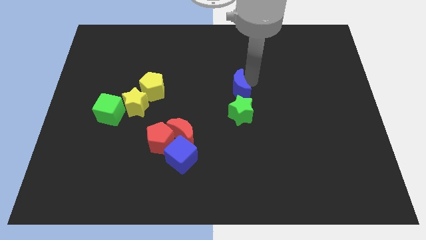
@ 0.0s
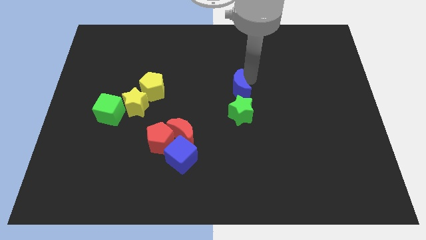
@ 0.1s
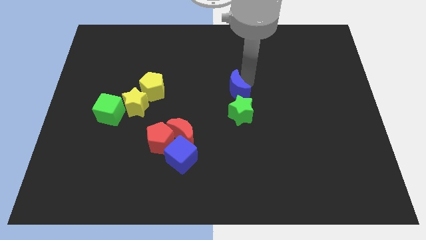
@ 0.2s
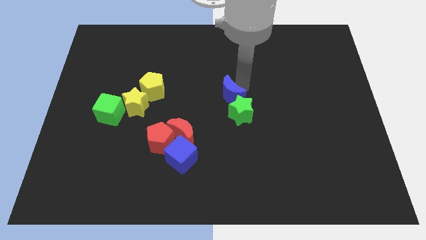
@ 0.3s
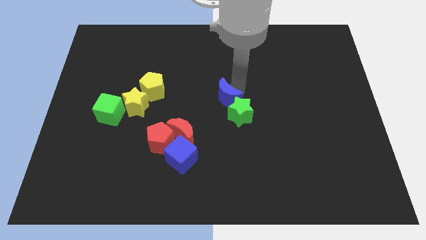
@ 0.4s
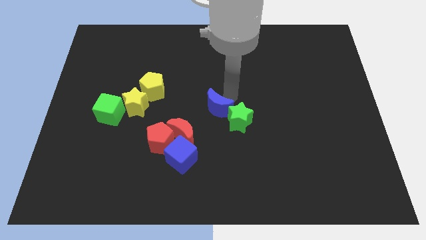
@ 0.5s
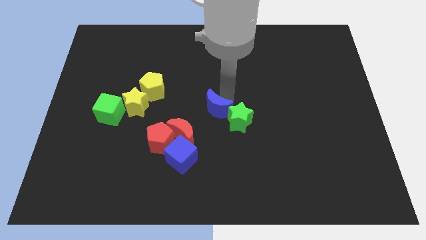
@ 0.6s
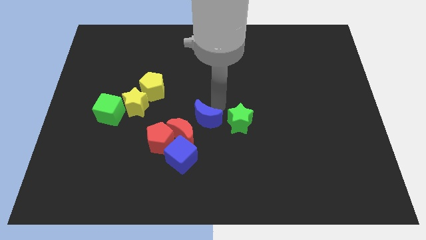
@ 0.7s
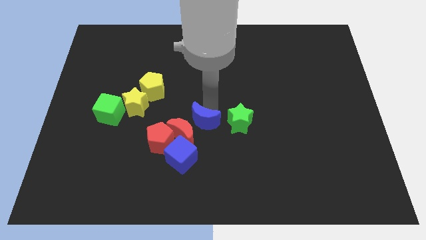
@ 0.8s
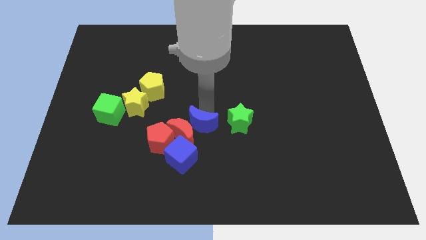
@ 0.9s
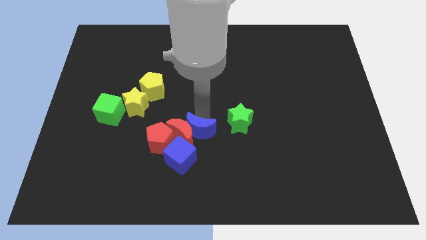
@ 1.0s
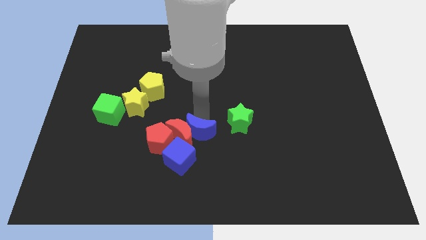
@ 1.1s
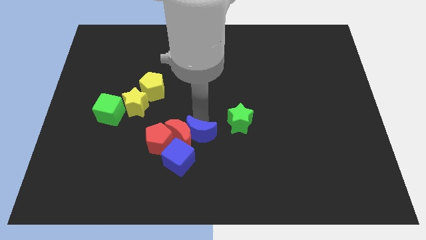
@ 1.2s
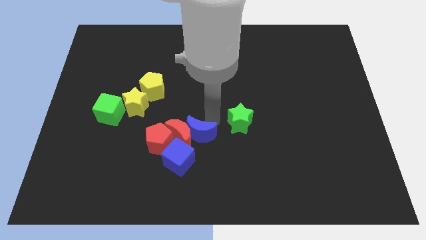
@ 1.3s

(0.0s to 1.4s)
push the blue crescent into the right of the red crescent

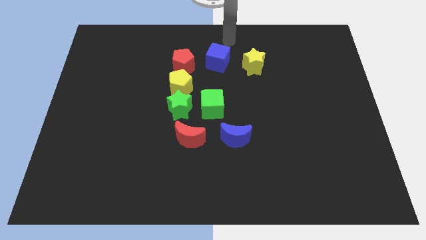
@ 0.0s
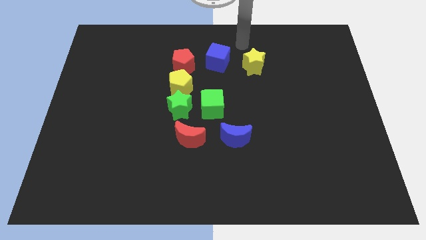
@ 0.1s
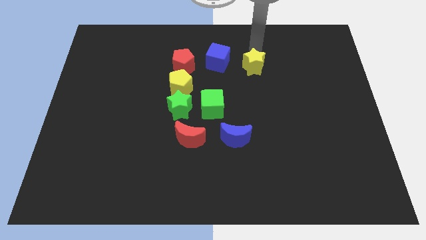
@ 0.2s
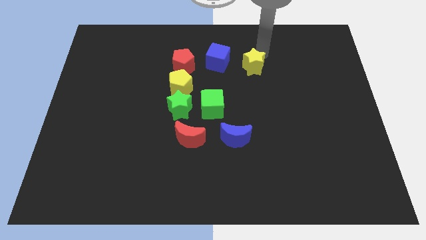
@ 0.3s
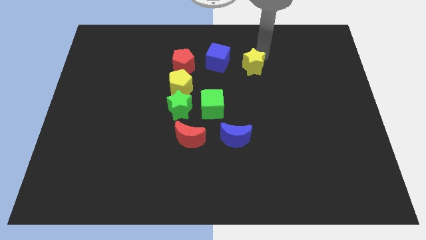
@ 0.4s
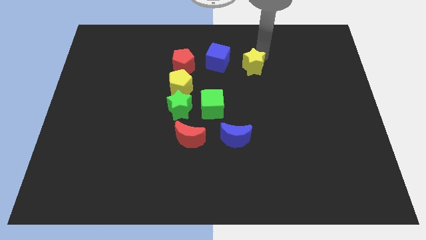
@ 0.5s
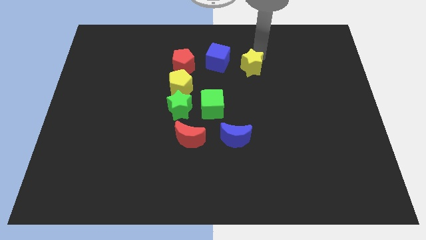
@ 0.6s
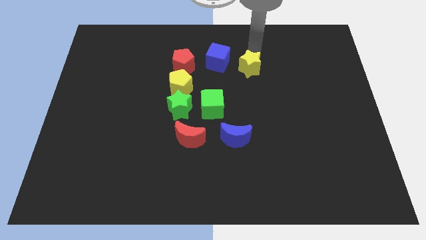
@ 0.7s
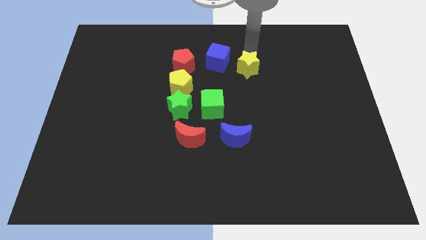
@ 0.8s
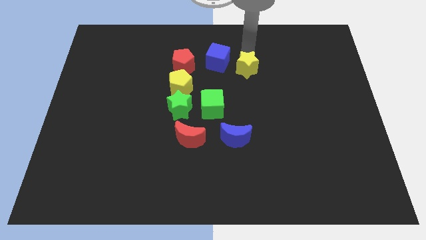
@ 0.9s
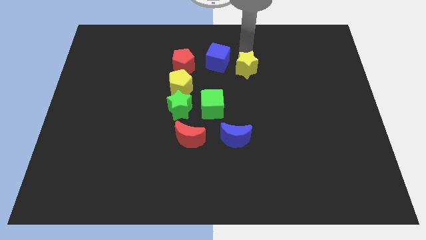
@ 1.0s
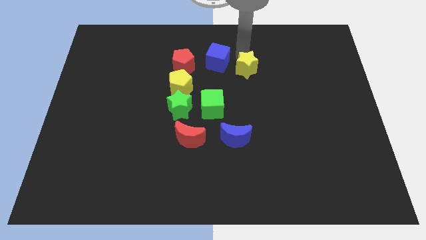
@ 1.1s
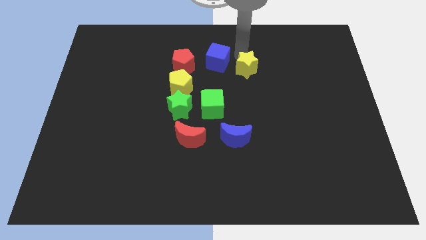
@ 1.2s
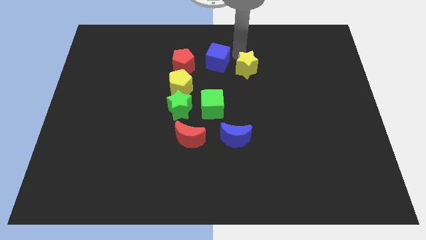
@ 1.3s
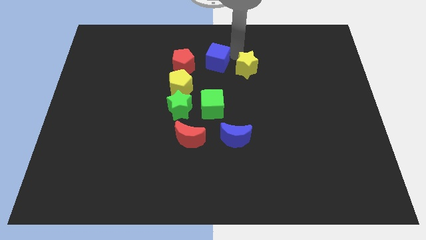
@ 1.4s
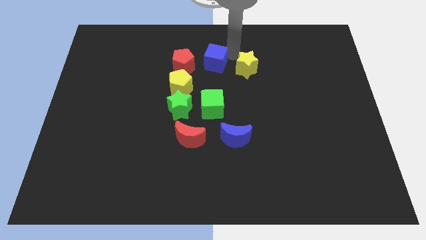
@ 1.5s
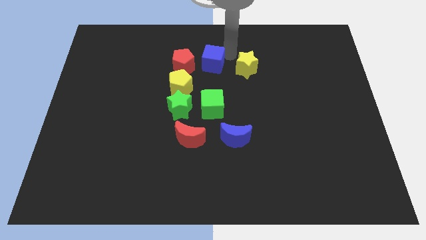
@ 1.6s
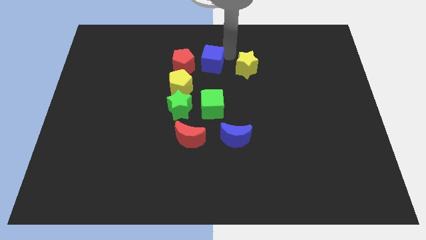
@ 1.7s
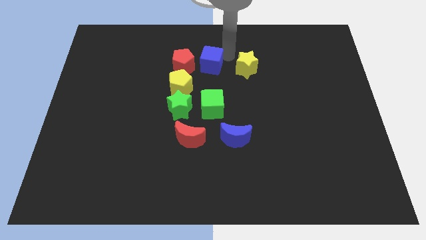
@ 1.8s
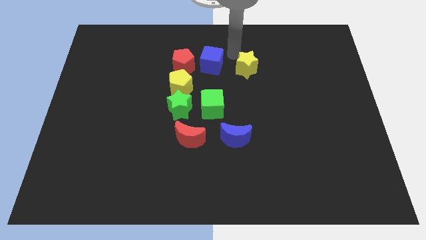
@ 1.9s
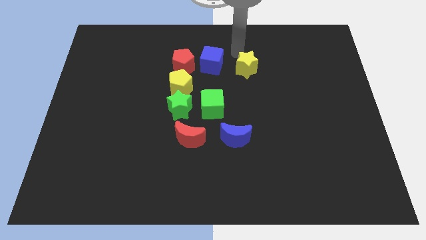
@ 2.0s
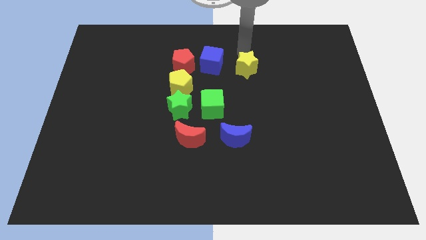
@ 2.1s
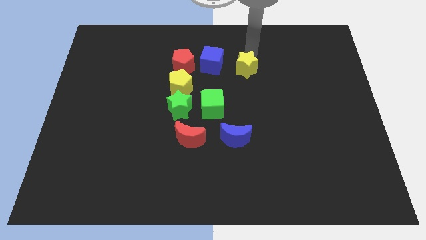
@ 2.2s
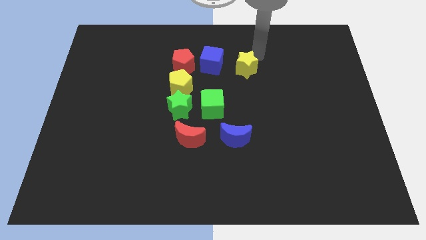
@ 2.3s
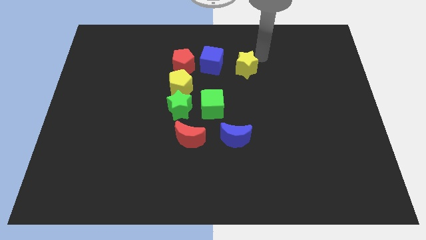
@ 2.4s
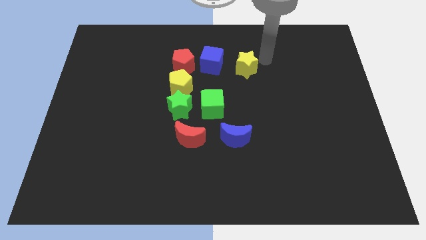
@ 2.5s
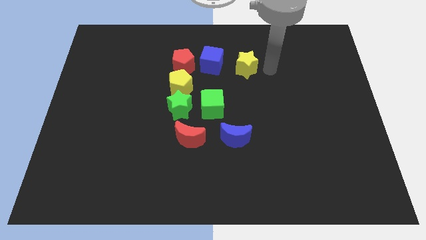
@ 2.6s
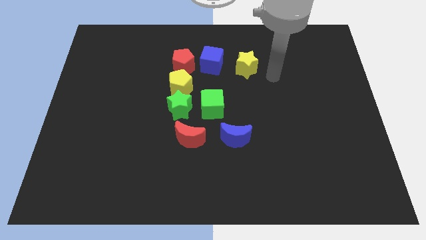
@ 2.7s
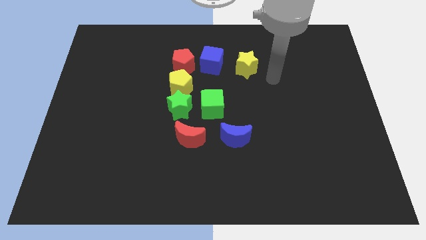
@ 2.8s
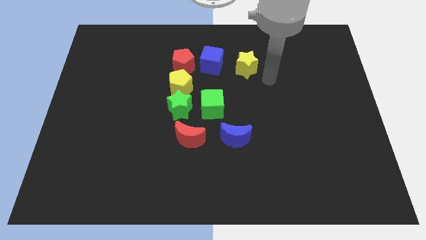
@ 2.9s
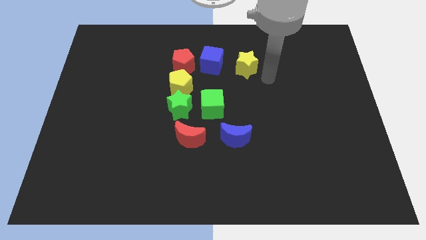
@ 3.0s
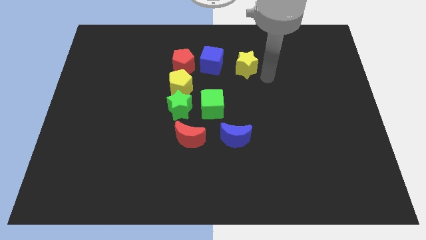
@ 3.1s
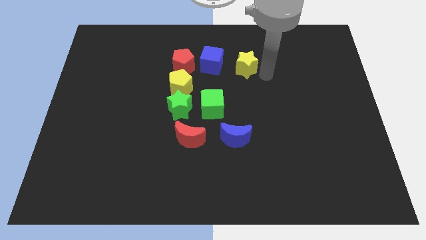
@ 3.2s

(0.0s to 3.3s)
slightly push the yellow star and blue cube towards group of blocks

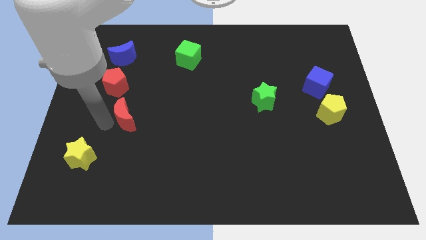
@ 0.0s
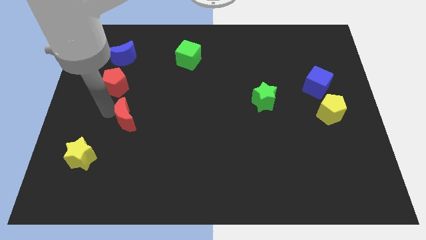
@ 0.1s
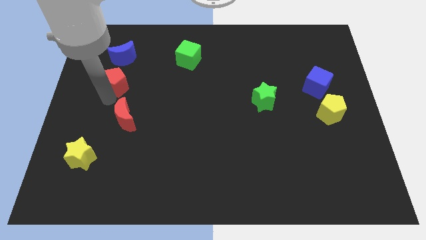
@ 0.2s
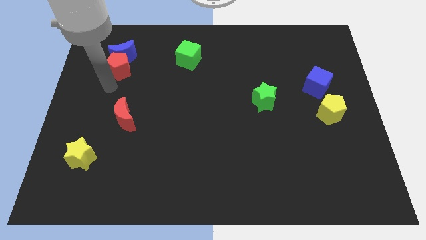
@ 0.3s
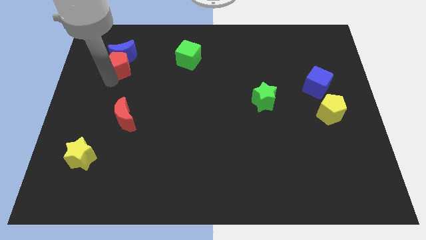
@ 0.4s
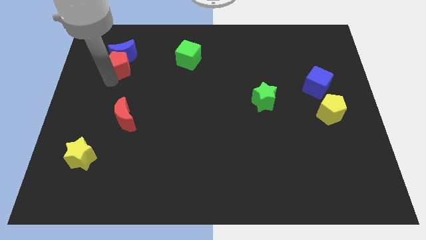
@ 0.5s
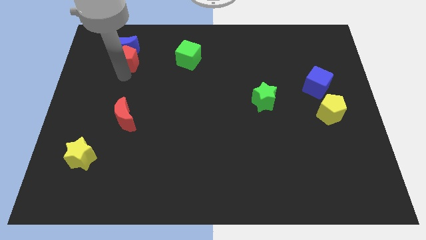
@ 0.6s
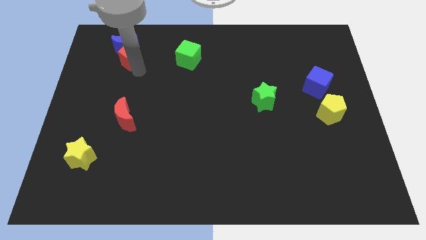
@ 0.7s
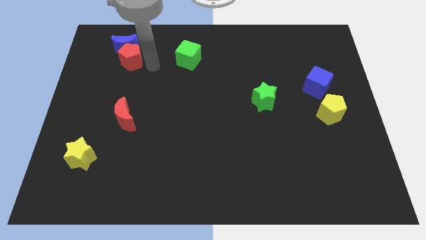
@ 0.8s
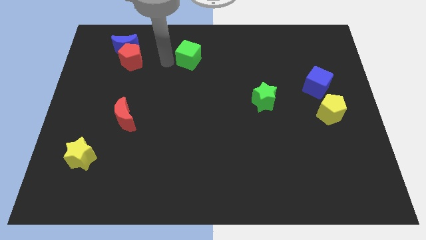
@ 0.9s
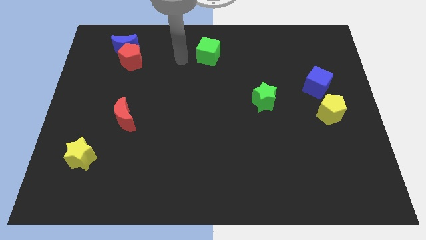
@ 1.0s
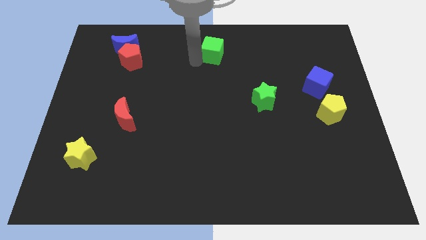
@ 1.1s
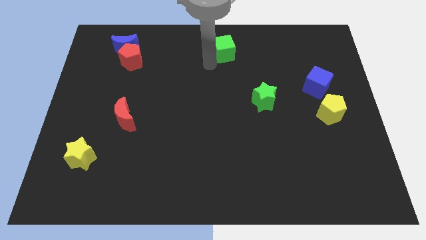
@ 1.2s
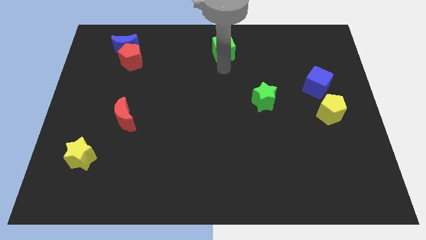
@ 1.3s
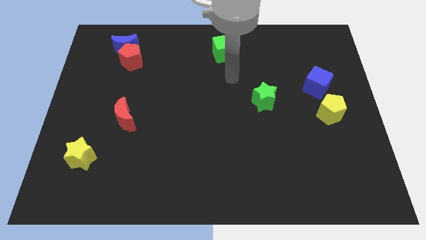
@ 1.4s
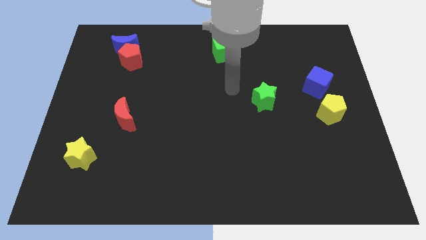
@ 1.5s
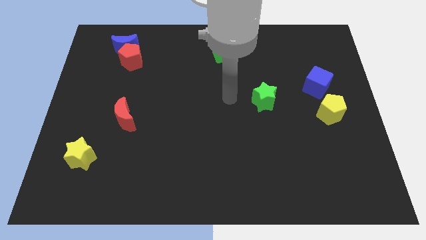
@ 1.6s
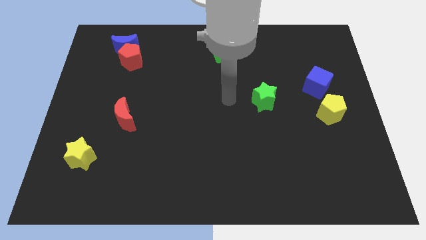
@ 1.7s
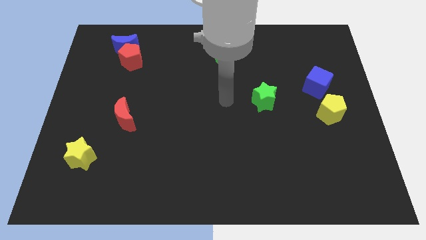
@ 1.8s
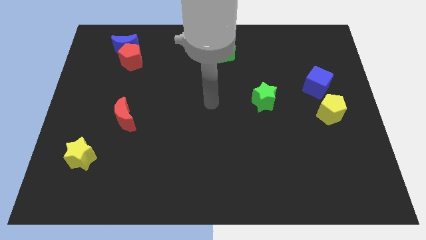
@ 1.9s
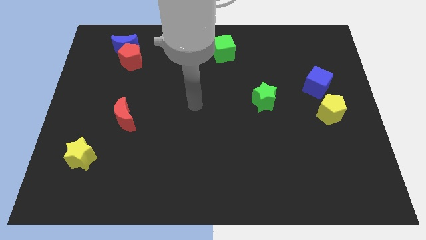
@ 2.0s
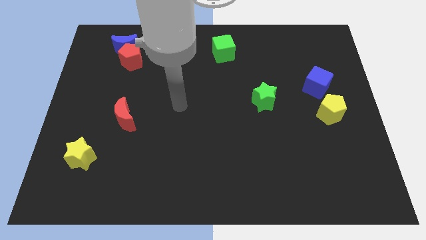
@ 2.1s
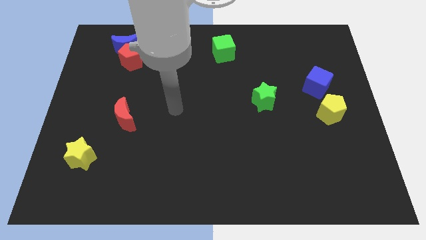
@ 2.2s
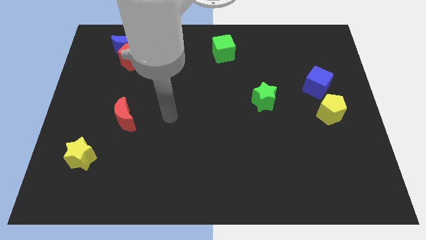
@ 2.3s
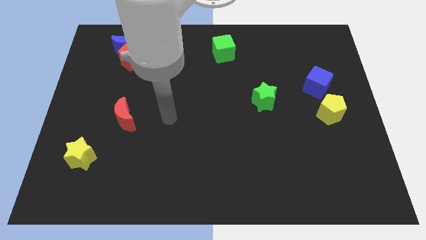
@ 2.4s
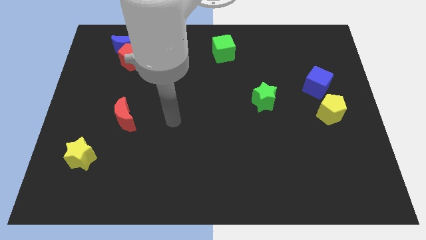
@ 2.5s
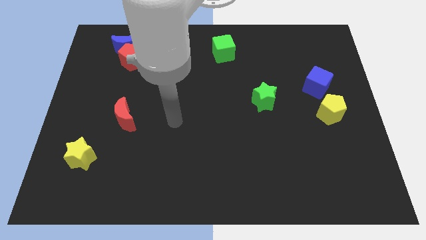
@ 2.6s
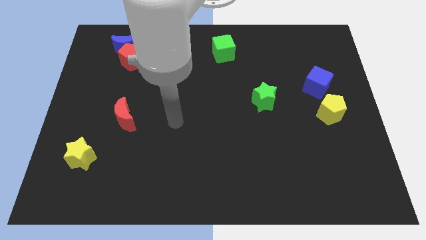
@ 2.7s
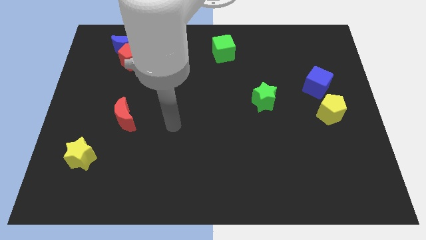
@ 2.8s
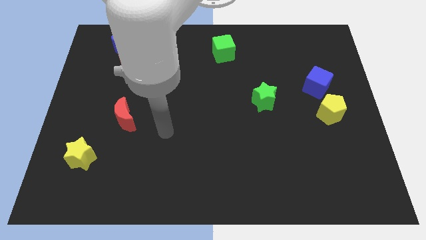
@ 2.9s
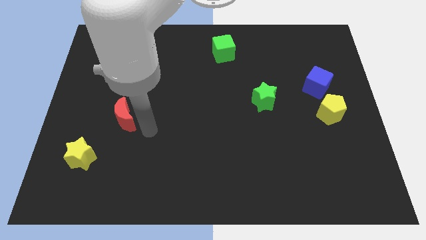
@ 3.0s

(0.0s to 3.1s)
place the green cube to the top center of the board

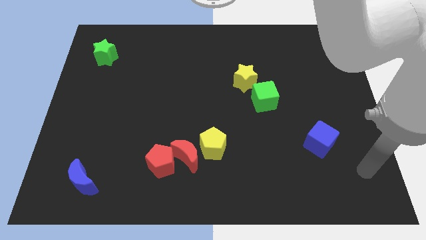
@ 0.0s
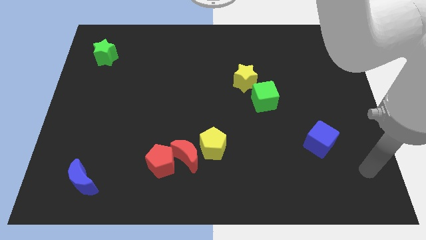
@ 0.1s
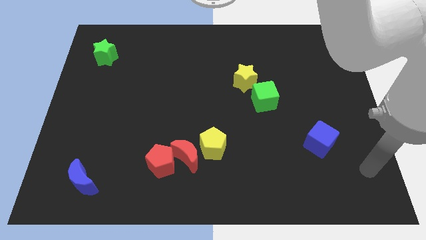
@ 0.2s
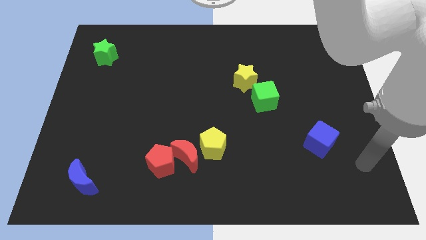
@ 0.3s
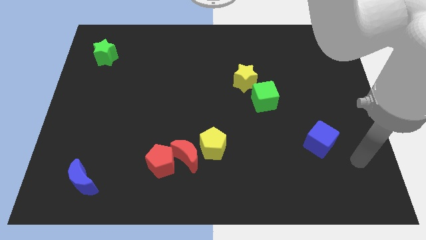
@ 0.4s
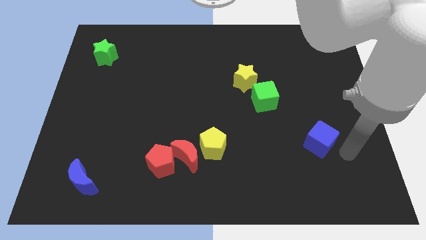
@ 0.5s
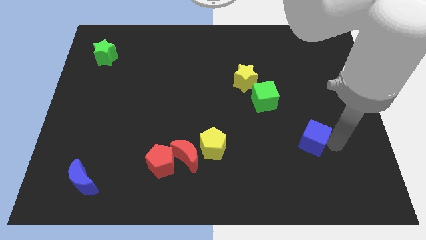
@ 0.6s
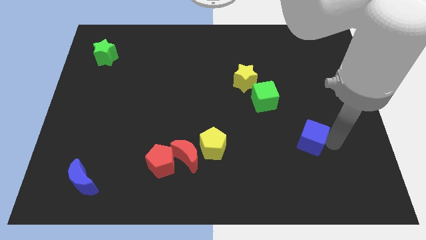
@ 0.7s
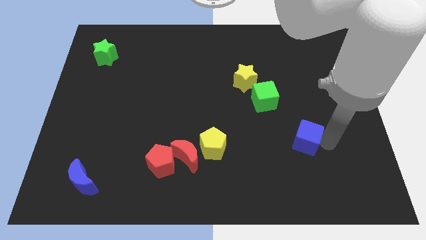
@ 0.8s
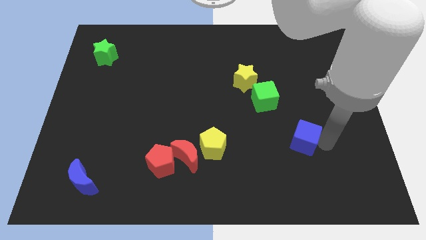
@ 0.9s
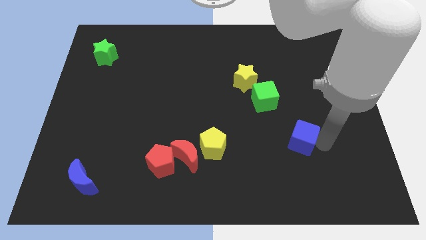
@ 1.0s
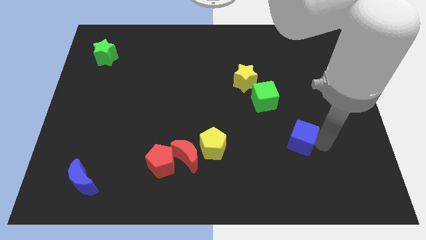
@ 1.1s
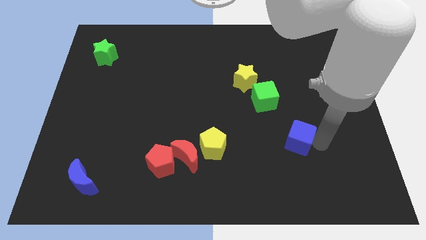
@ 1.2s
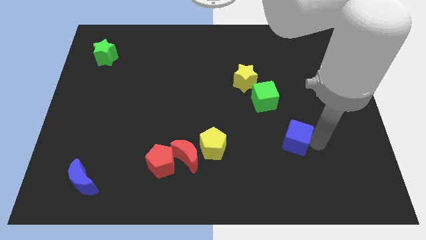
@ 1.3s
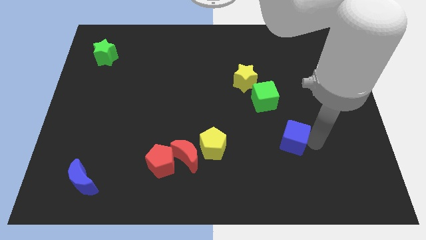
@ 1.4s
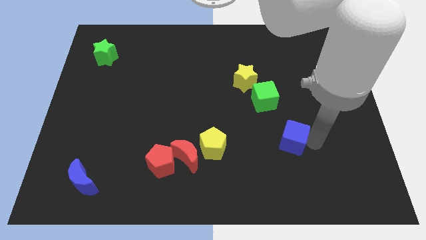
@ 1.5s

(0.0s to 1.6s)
slightly push the blue cube towards left
